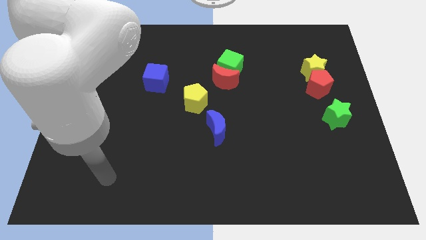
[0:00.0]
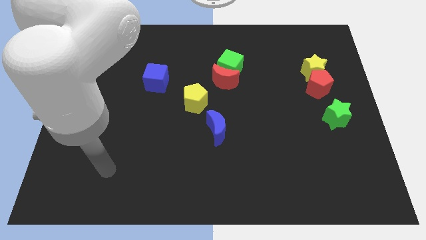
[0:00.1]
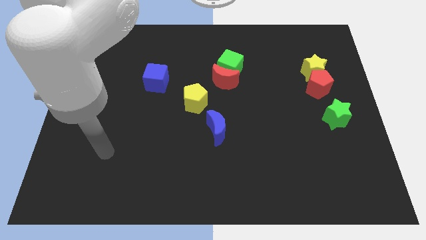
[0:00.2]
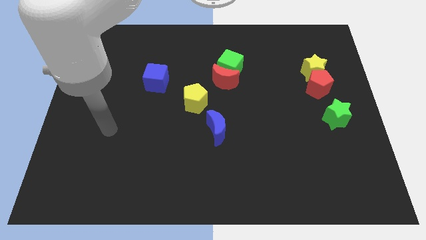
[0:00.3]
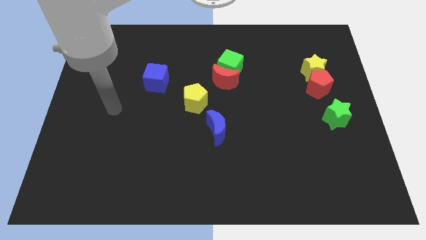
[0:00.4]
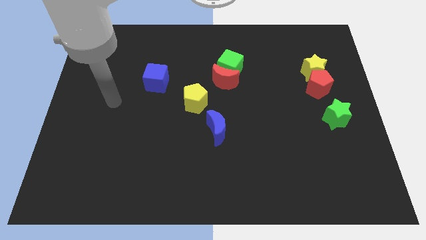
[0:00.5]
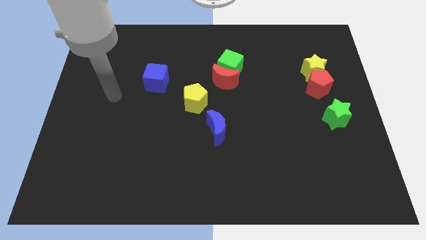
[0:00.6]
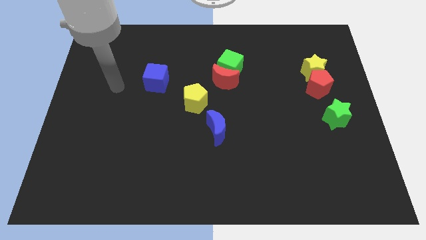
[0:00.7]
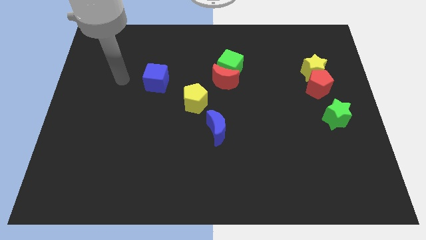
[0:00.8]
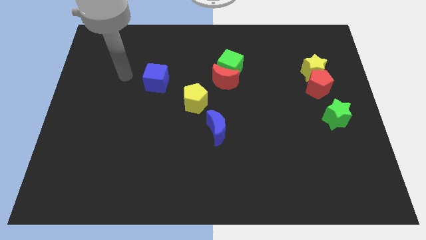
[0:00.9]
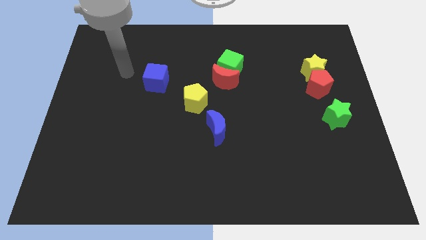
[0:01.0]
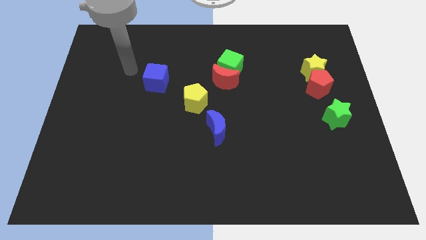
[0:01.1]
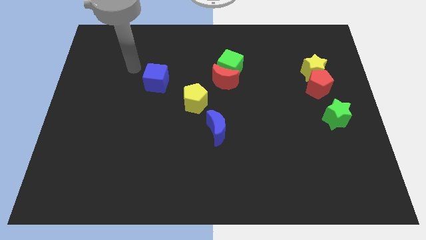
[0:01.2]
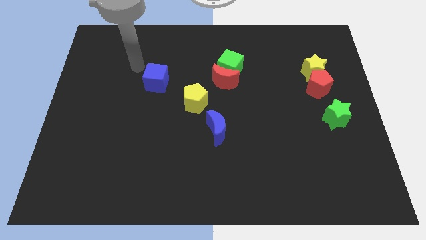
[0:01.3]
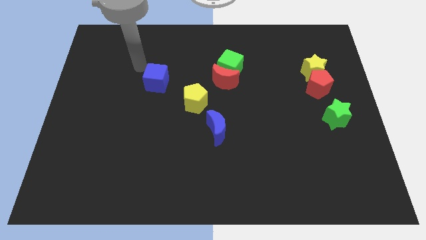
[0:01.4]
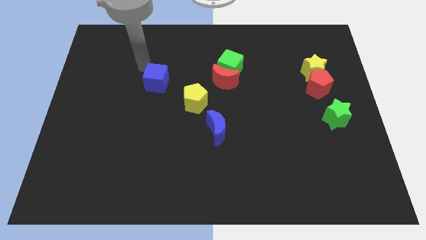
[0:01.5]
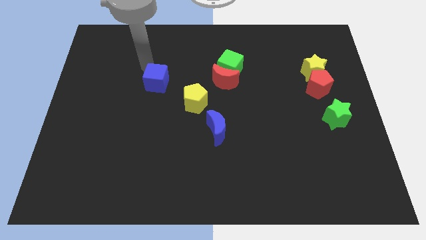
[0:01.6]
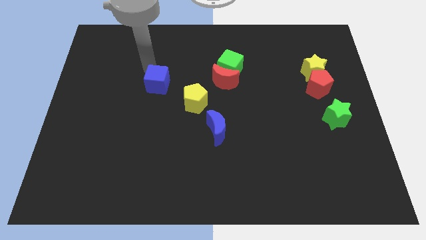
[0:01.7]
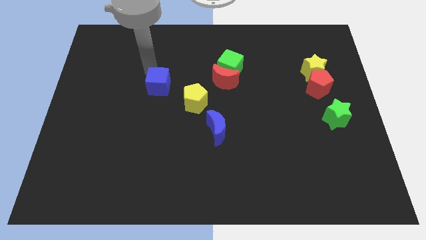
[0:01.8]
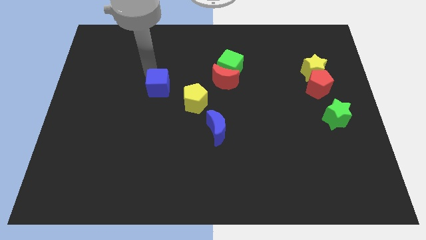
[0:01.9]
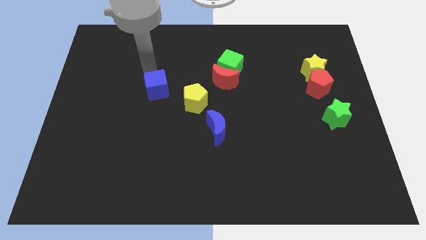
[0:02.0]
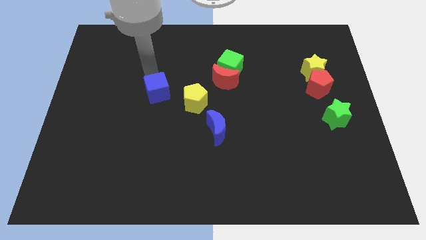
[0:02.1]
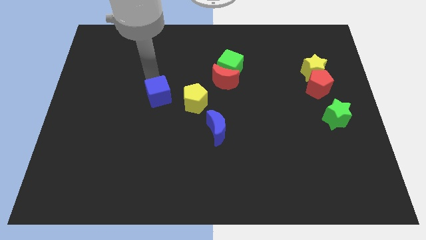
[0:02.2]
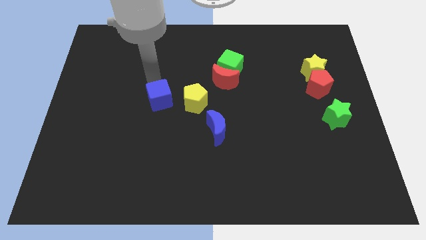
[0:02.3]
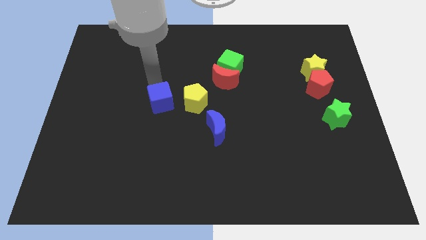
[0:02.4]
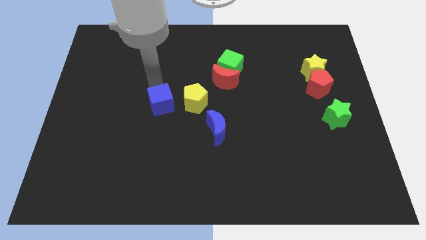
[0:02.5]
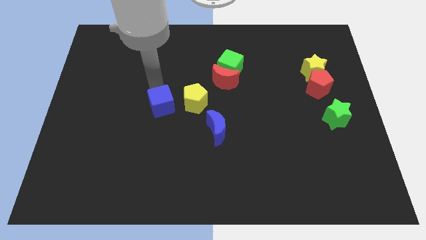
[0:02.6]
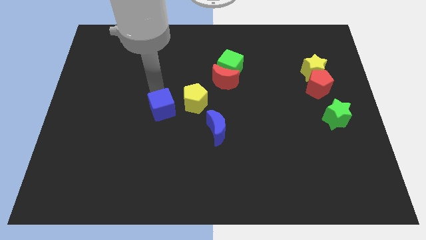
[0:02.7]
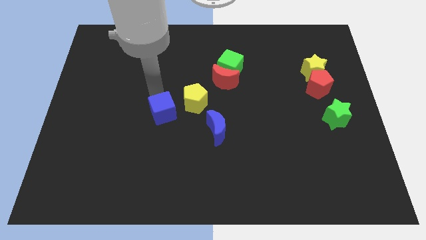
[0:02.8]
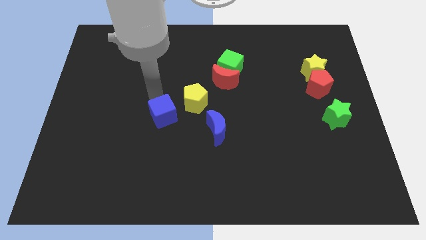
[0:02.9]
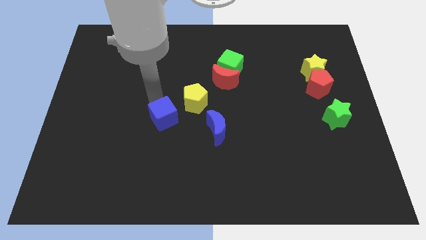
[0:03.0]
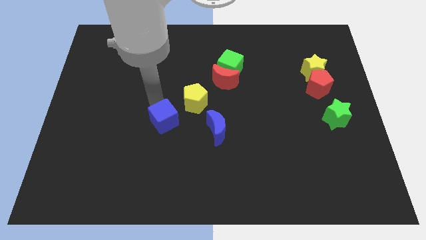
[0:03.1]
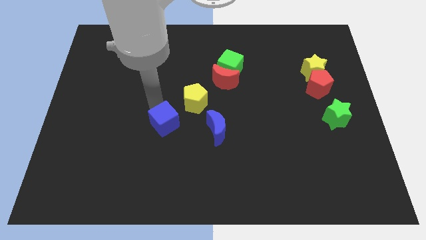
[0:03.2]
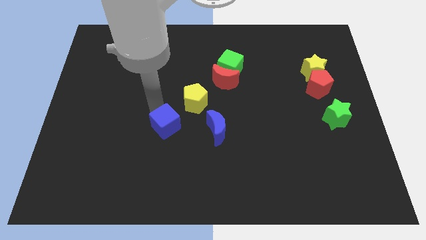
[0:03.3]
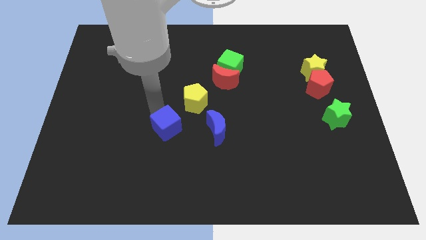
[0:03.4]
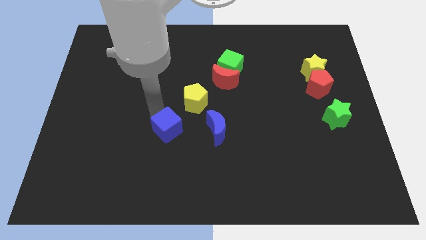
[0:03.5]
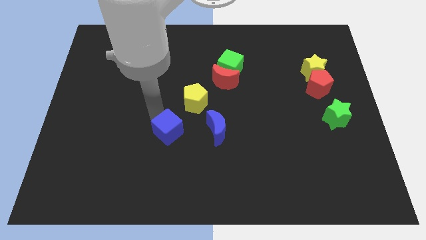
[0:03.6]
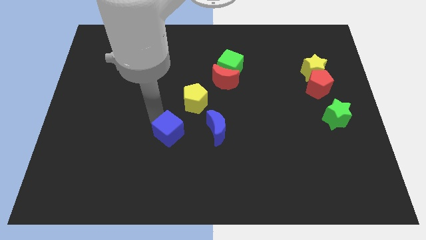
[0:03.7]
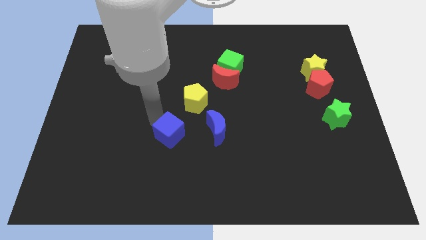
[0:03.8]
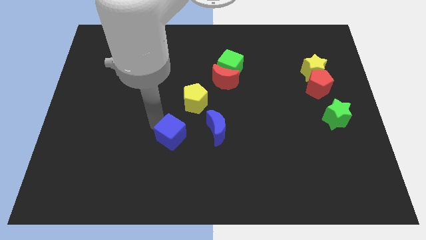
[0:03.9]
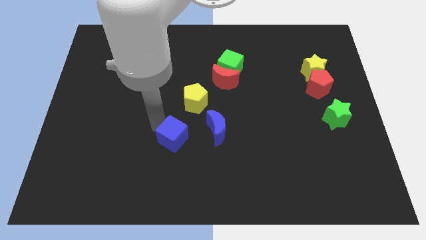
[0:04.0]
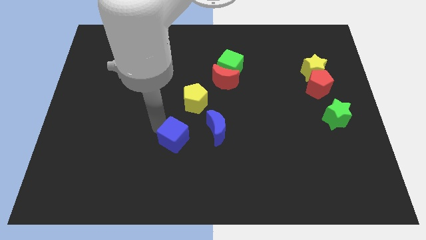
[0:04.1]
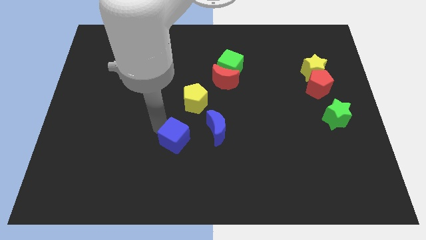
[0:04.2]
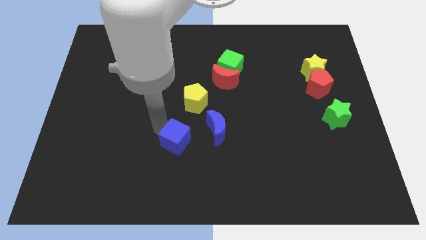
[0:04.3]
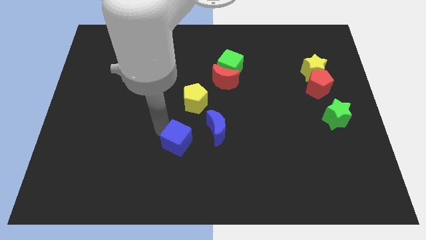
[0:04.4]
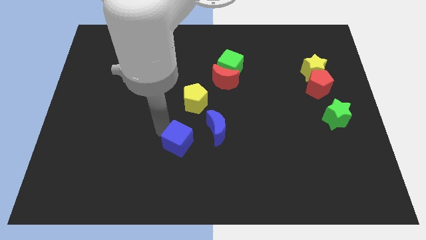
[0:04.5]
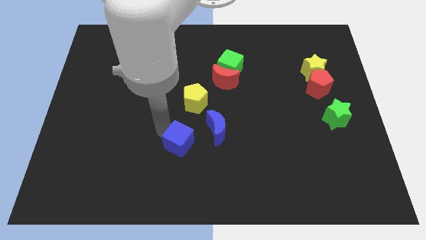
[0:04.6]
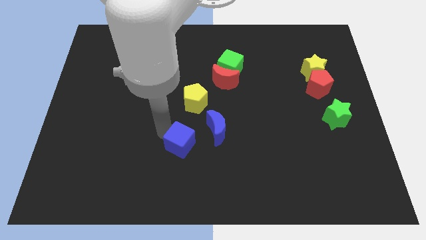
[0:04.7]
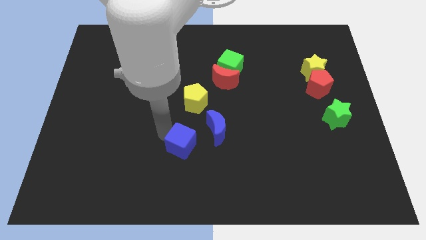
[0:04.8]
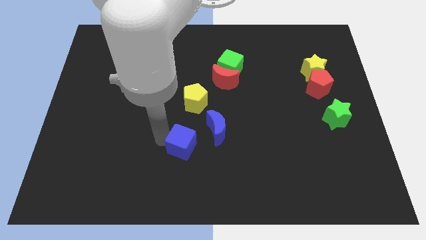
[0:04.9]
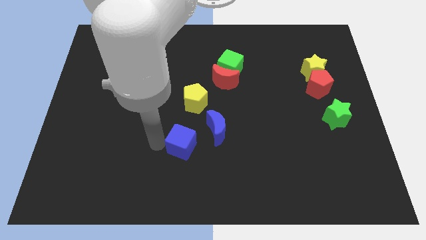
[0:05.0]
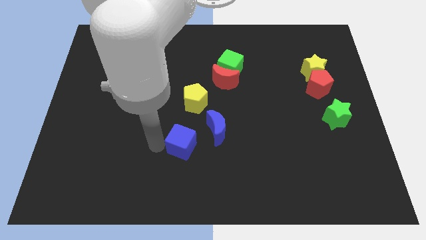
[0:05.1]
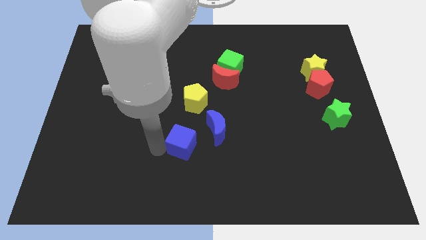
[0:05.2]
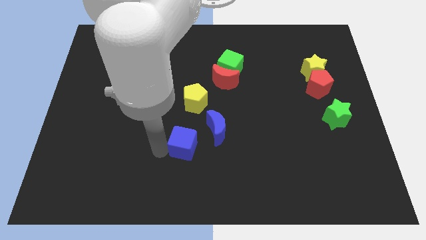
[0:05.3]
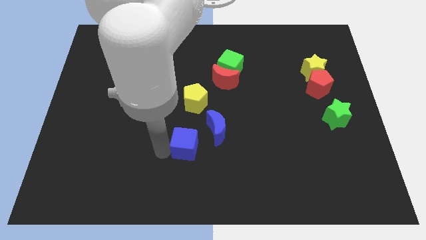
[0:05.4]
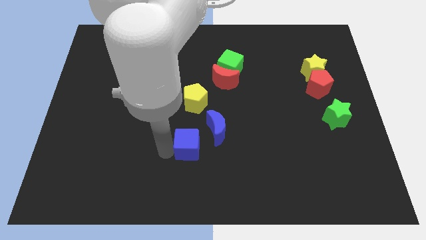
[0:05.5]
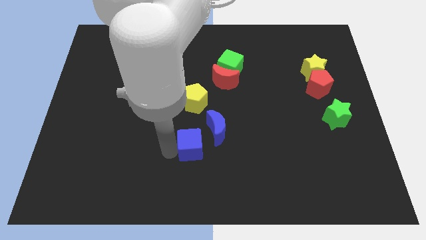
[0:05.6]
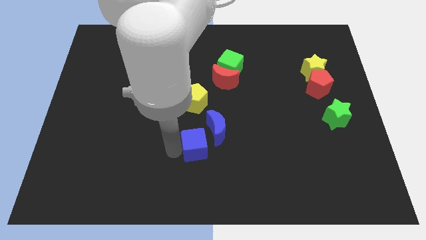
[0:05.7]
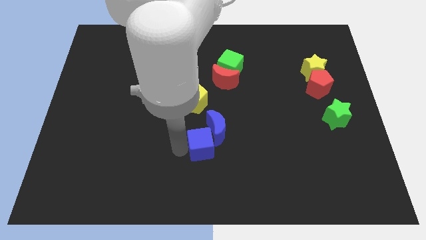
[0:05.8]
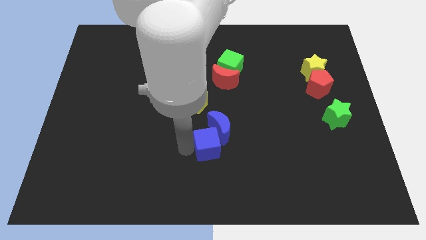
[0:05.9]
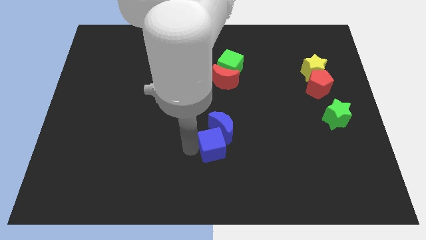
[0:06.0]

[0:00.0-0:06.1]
push the blue cube towards the blue moon

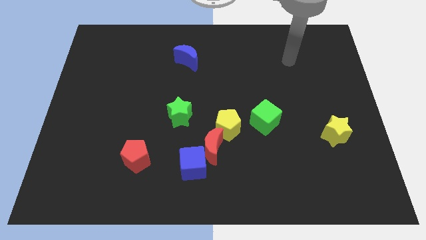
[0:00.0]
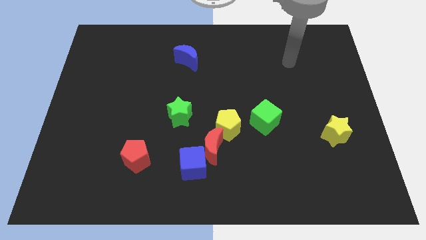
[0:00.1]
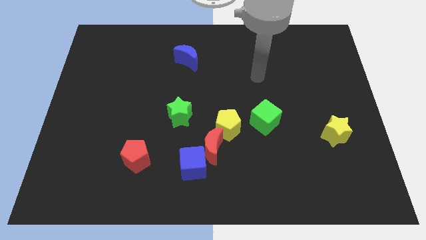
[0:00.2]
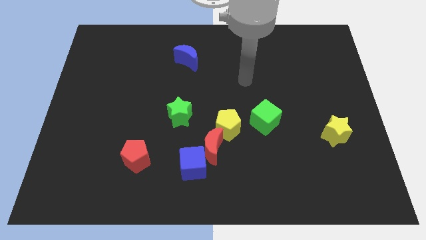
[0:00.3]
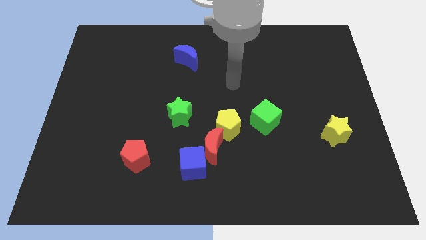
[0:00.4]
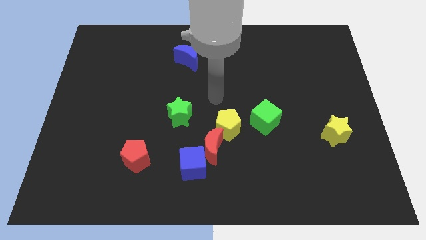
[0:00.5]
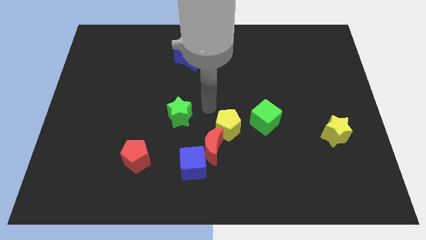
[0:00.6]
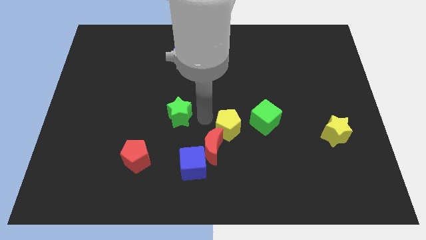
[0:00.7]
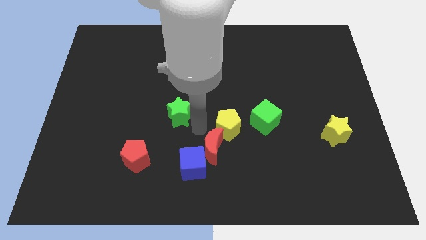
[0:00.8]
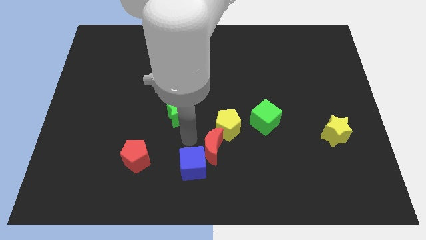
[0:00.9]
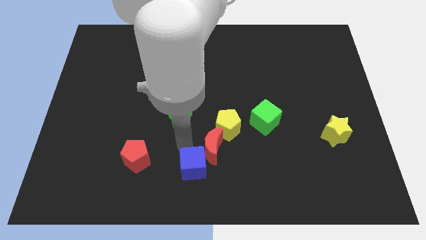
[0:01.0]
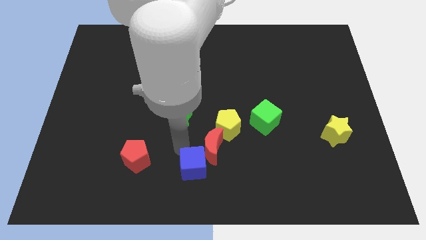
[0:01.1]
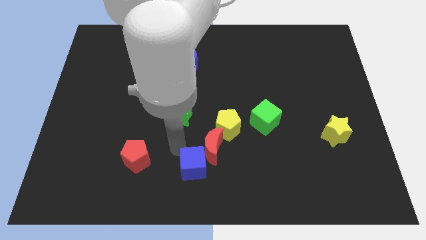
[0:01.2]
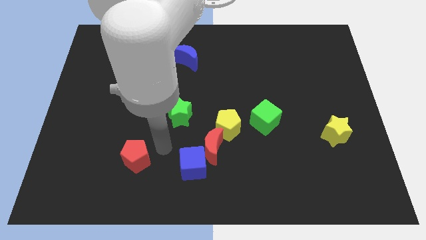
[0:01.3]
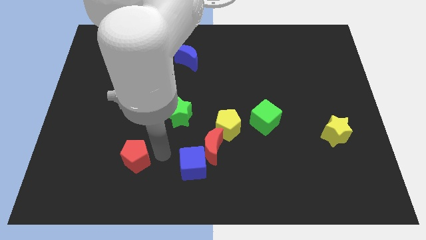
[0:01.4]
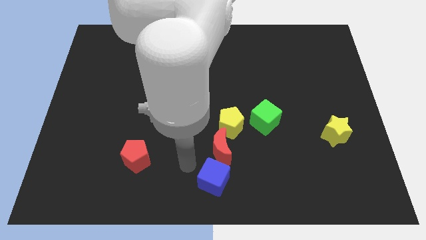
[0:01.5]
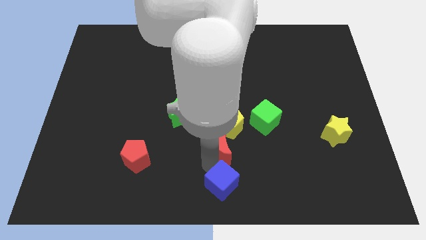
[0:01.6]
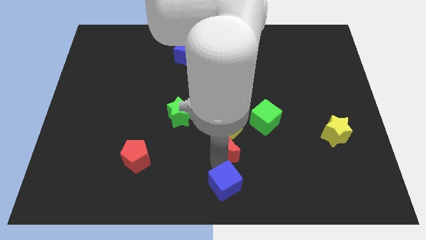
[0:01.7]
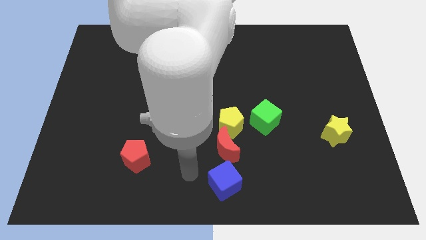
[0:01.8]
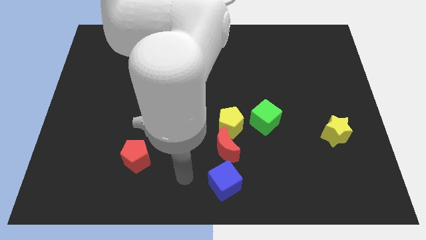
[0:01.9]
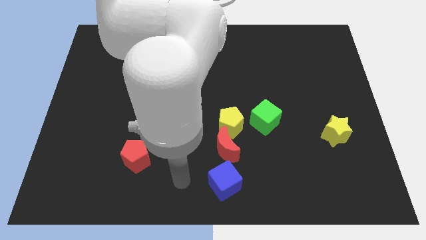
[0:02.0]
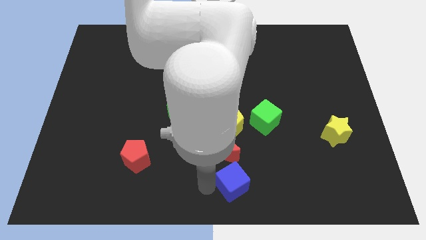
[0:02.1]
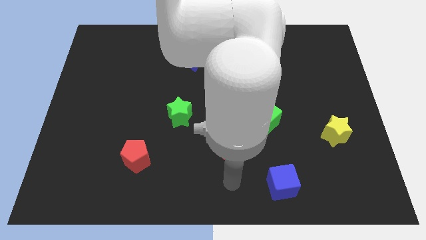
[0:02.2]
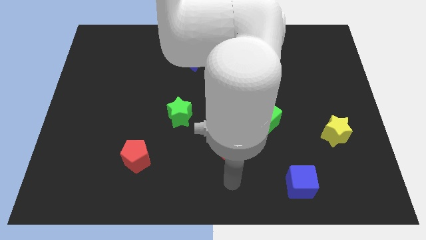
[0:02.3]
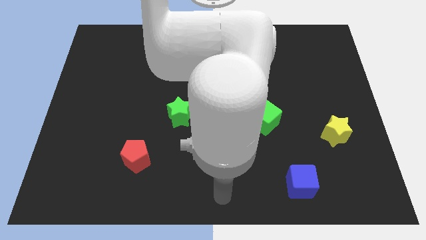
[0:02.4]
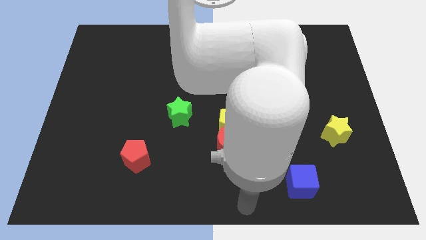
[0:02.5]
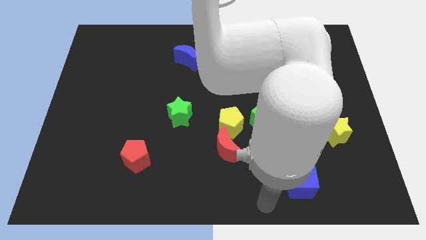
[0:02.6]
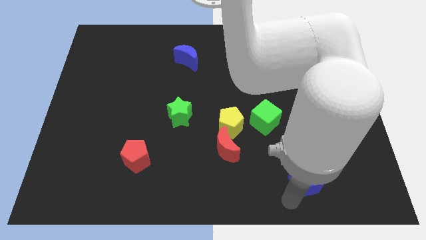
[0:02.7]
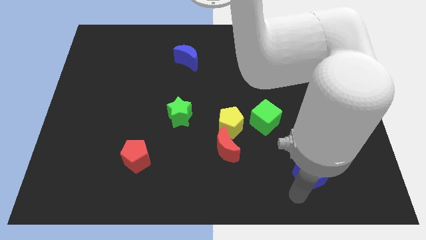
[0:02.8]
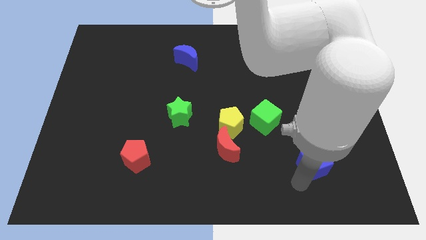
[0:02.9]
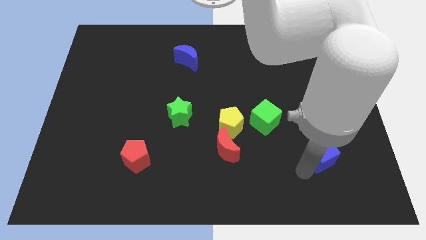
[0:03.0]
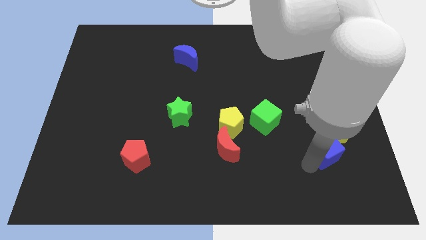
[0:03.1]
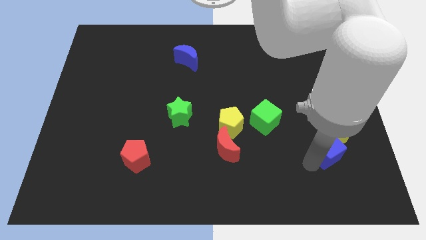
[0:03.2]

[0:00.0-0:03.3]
slide the blue cube close to the yellow star
